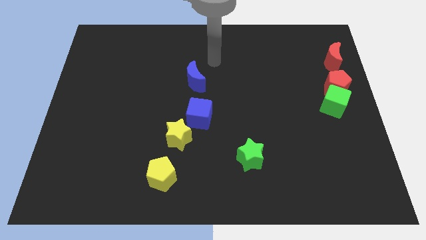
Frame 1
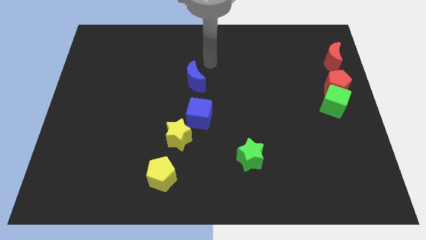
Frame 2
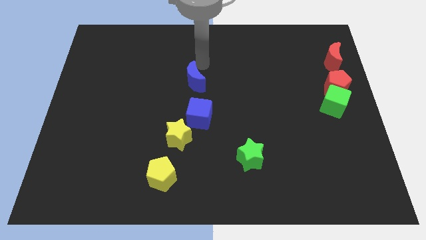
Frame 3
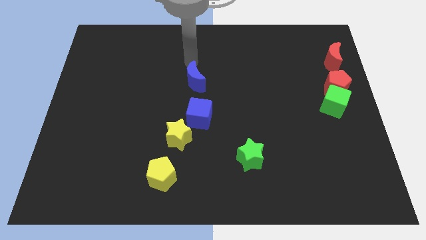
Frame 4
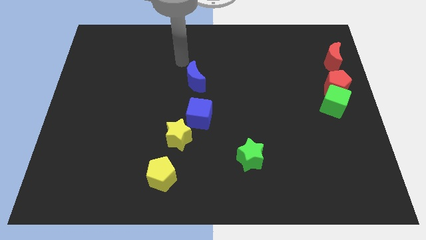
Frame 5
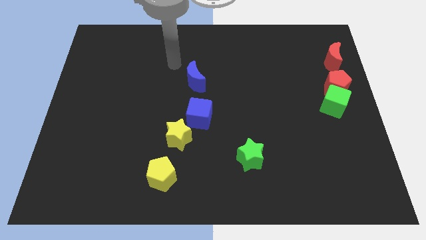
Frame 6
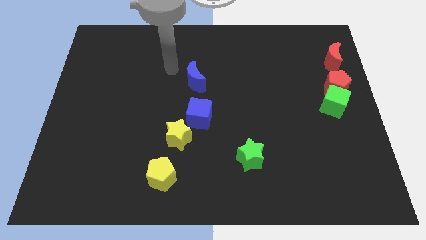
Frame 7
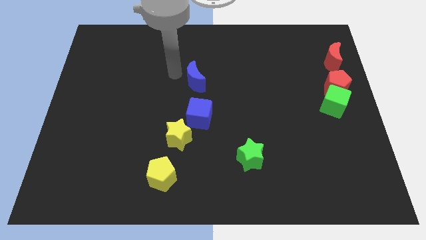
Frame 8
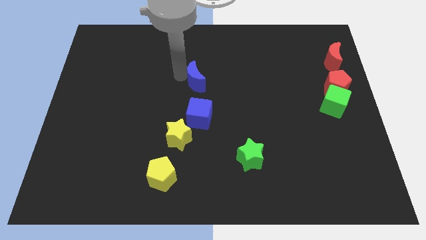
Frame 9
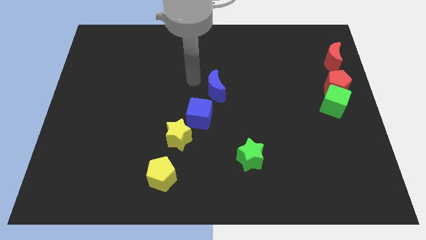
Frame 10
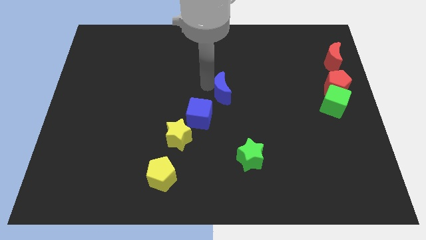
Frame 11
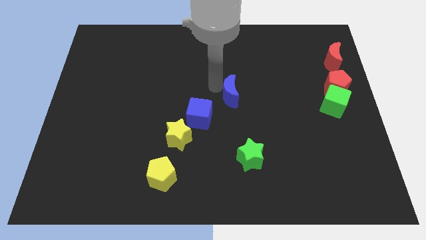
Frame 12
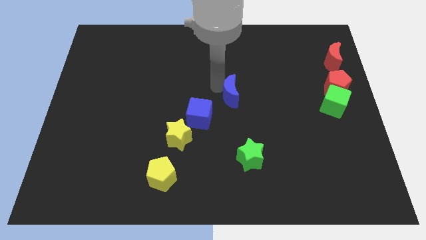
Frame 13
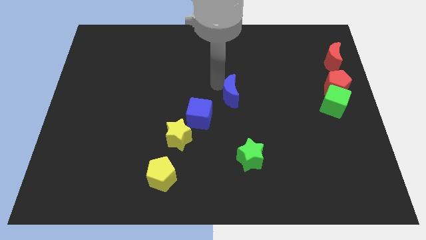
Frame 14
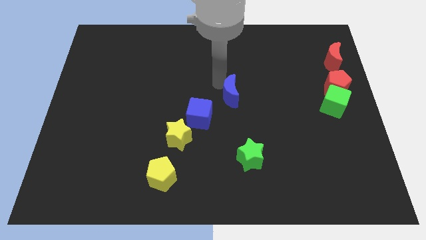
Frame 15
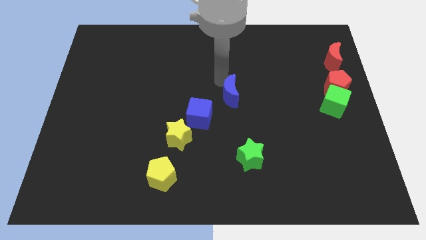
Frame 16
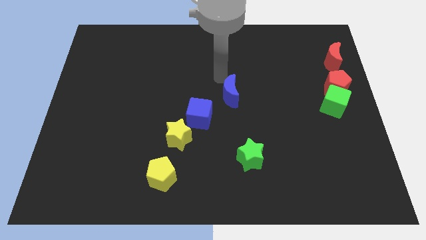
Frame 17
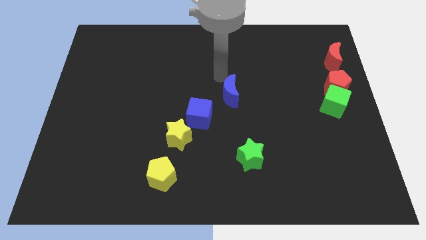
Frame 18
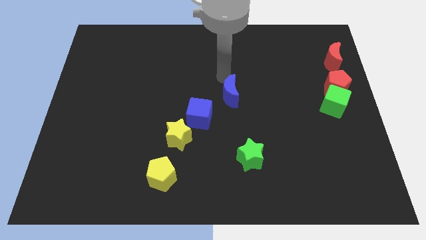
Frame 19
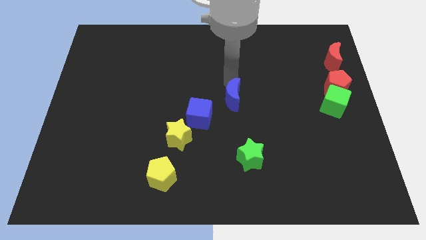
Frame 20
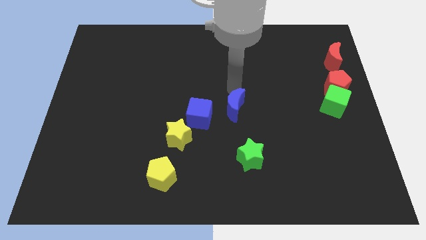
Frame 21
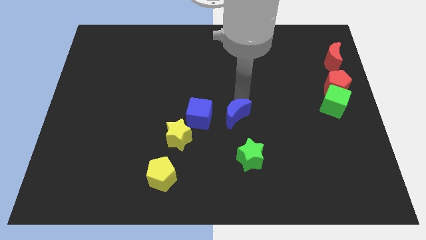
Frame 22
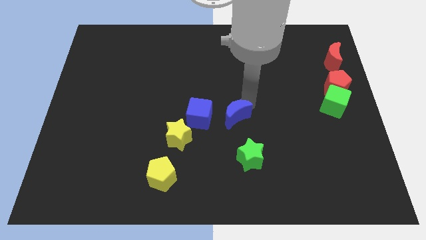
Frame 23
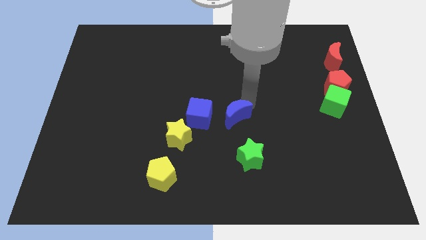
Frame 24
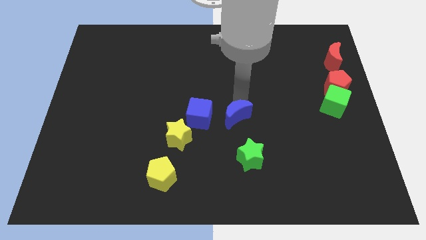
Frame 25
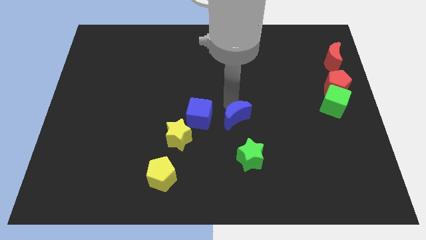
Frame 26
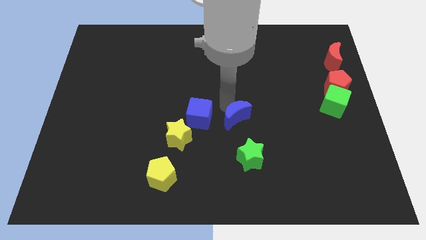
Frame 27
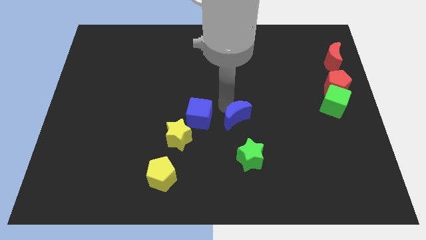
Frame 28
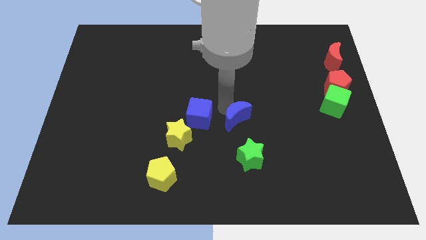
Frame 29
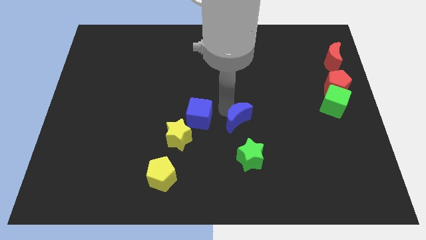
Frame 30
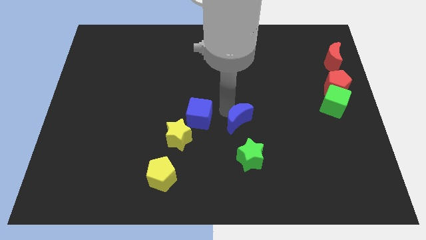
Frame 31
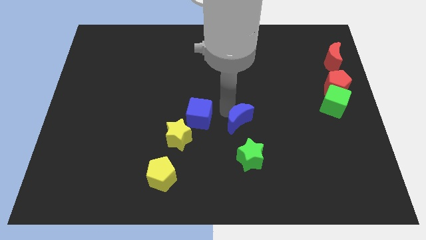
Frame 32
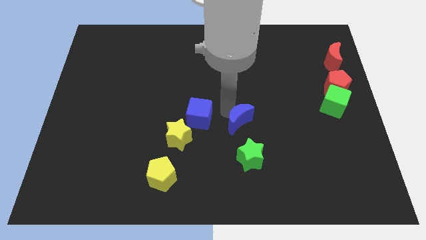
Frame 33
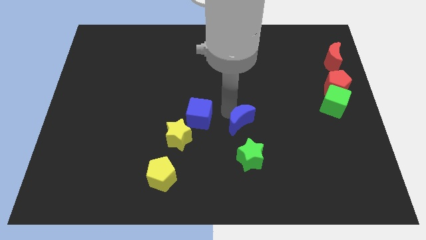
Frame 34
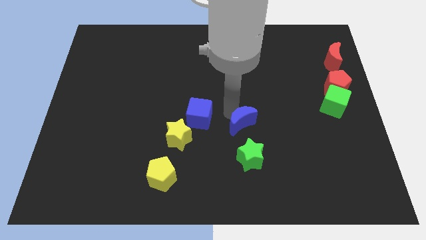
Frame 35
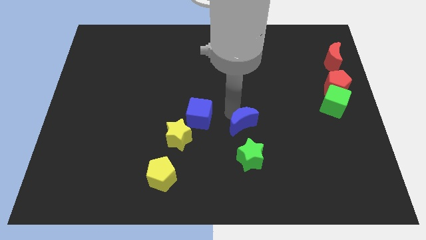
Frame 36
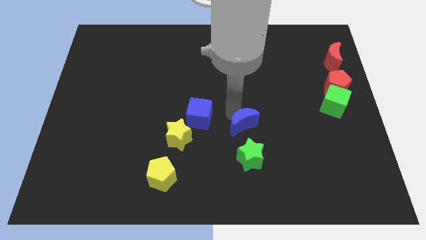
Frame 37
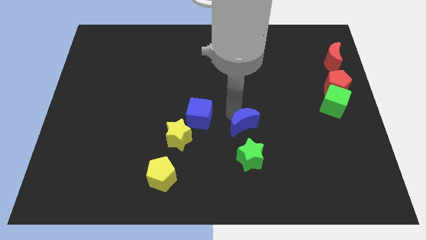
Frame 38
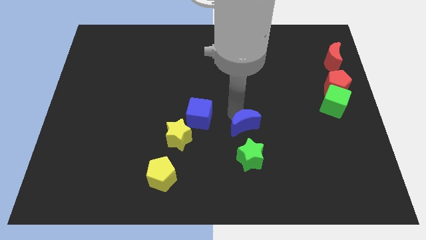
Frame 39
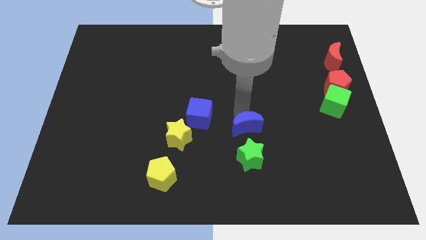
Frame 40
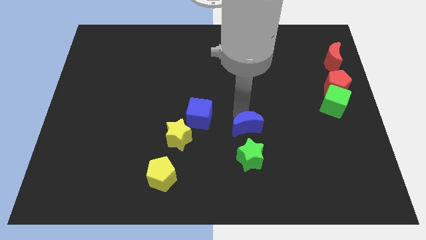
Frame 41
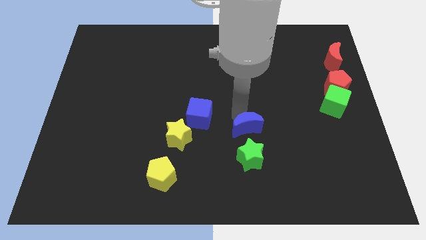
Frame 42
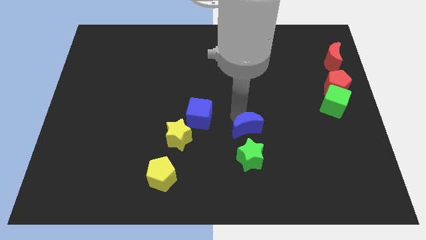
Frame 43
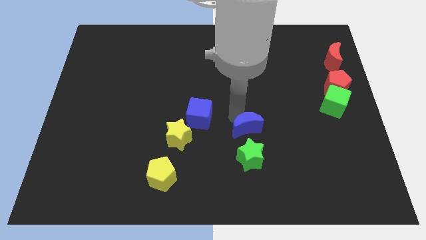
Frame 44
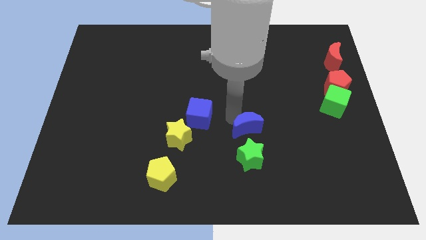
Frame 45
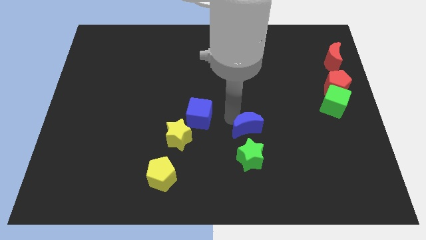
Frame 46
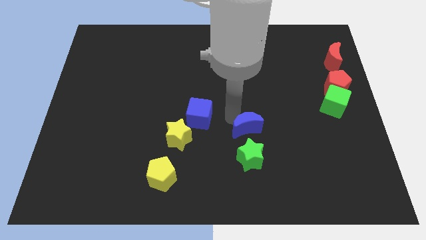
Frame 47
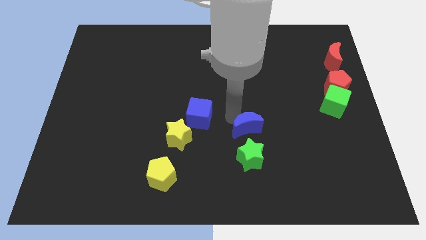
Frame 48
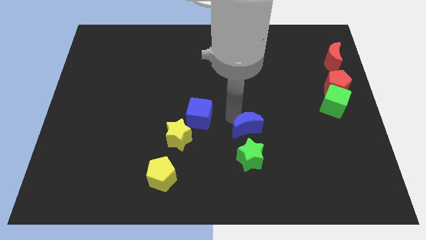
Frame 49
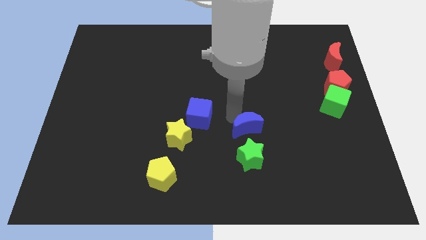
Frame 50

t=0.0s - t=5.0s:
move the blue moon to the top side of the green star

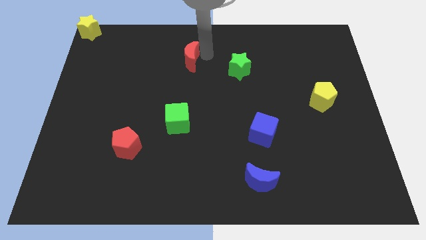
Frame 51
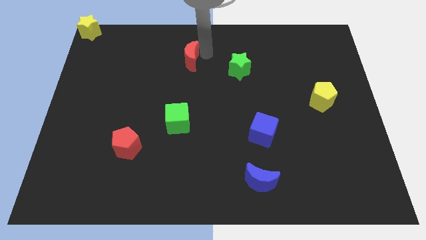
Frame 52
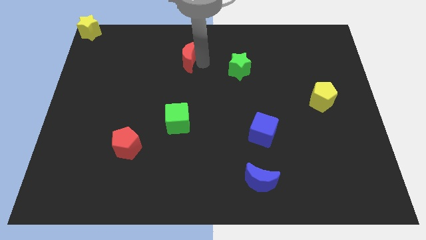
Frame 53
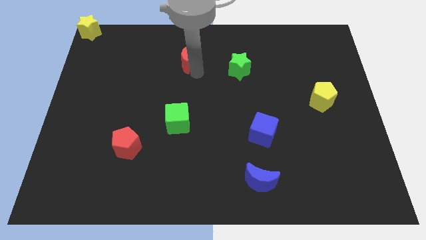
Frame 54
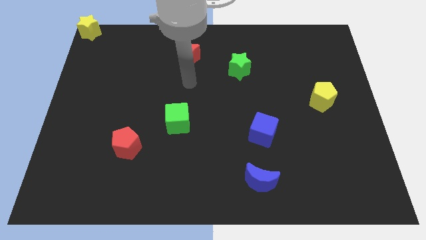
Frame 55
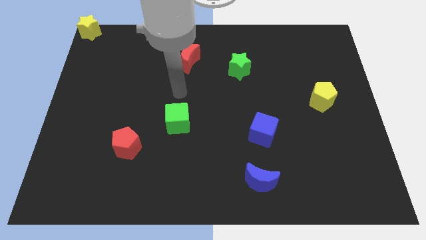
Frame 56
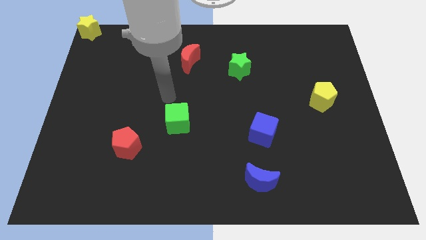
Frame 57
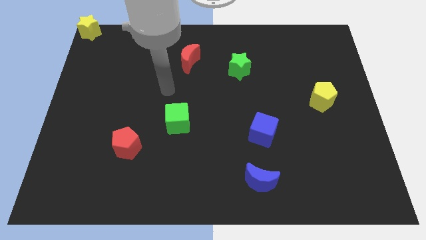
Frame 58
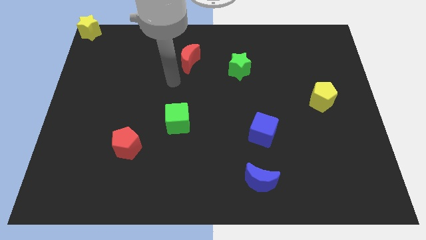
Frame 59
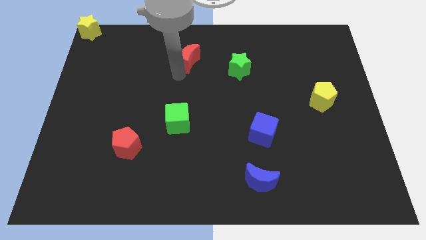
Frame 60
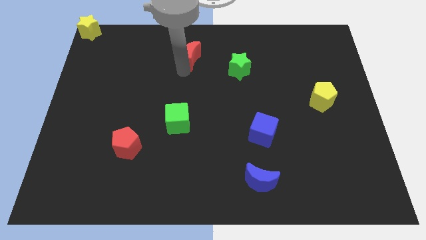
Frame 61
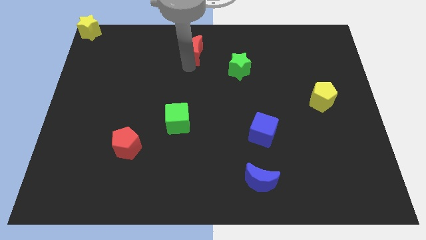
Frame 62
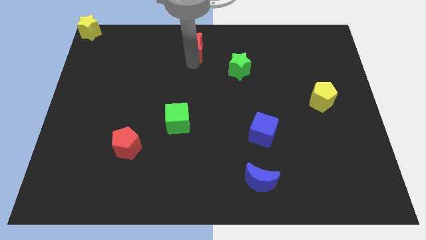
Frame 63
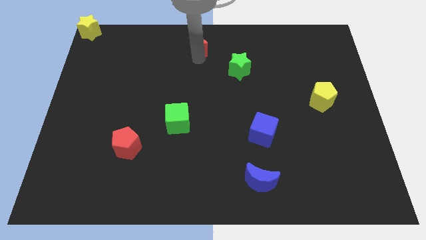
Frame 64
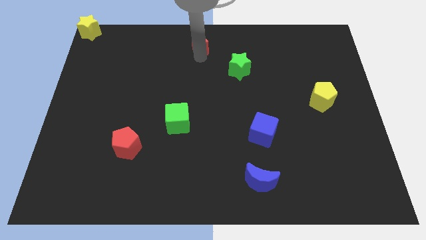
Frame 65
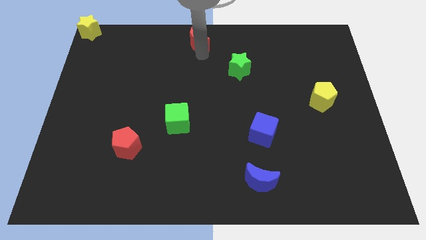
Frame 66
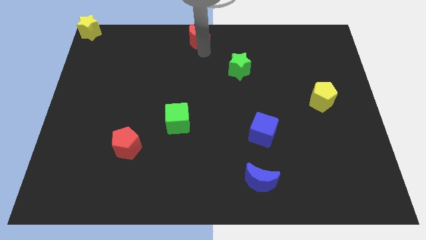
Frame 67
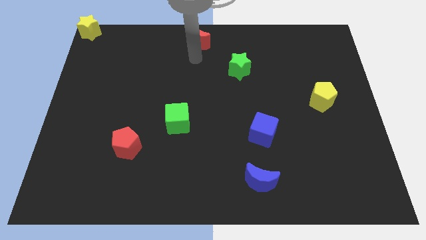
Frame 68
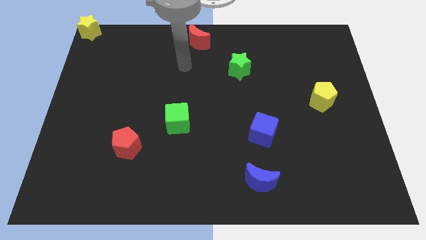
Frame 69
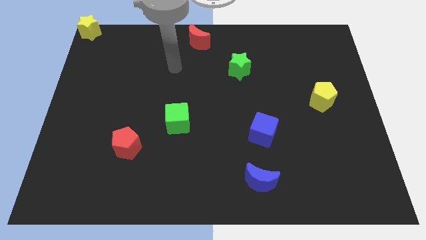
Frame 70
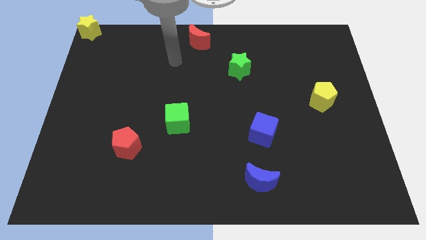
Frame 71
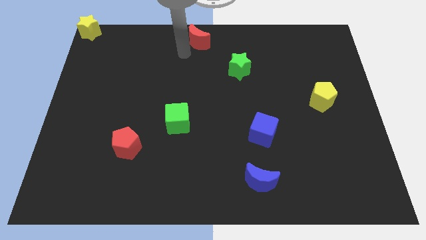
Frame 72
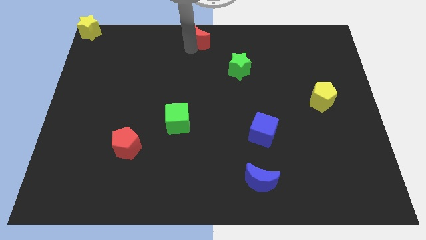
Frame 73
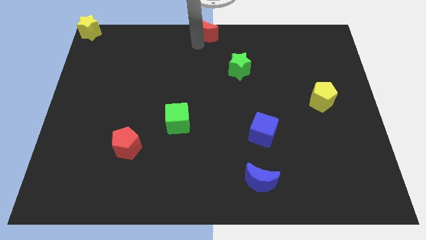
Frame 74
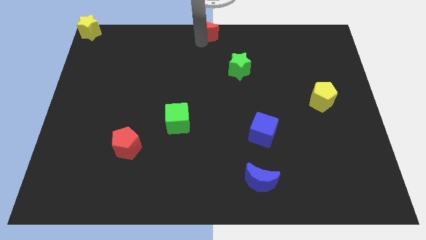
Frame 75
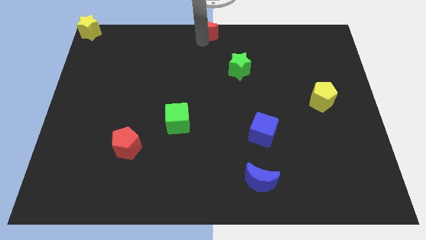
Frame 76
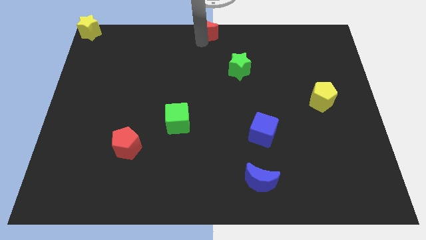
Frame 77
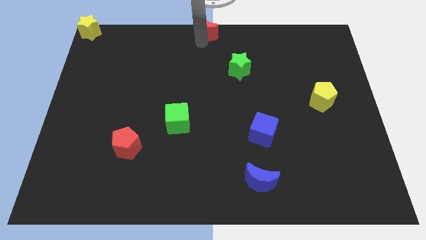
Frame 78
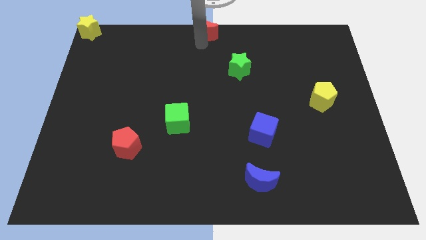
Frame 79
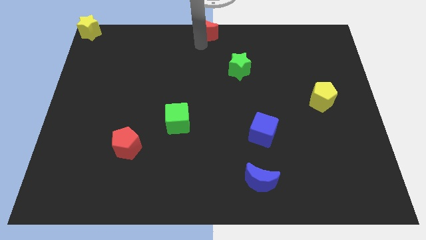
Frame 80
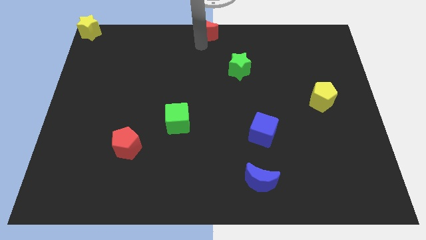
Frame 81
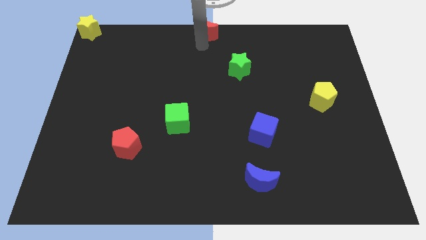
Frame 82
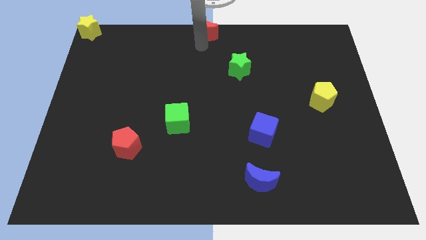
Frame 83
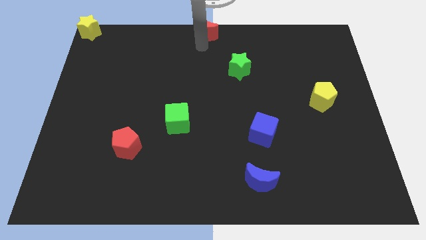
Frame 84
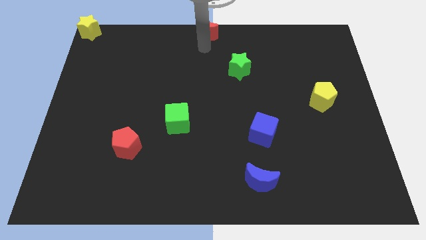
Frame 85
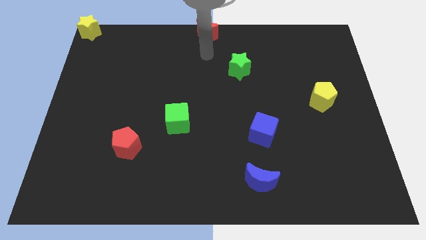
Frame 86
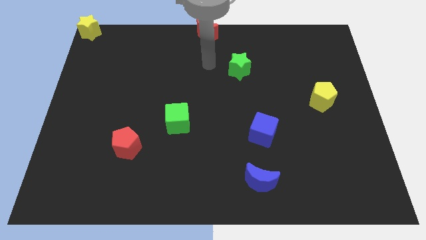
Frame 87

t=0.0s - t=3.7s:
push the red moon at the top center of the table

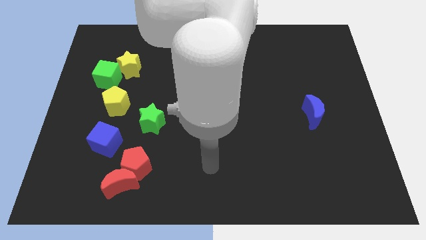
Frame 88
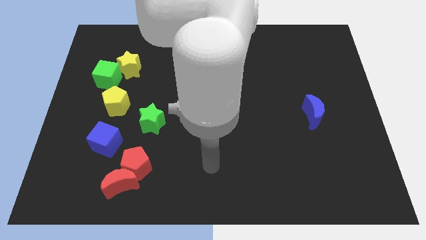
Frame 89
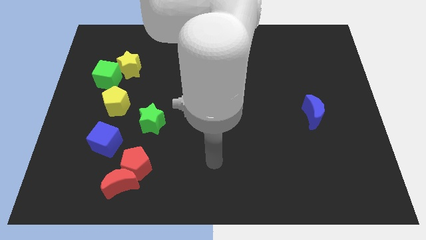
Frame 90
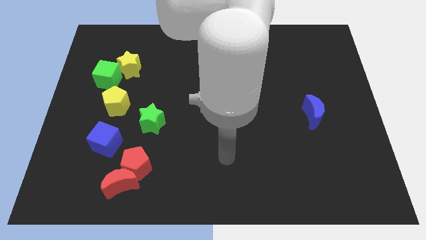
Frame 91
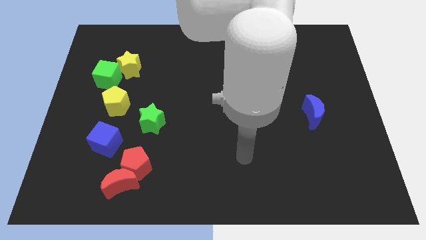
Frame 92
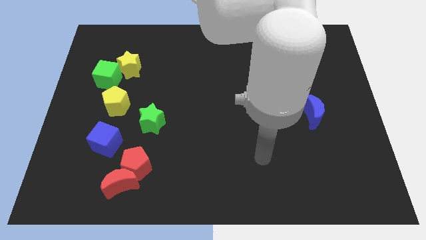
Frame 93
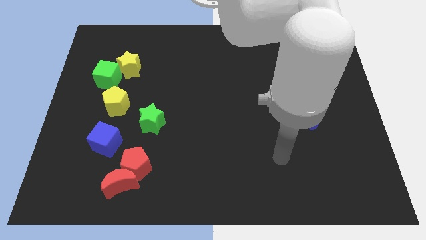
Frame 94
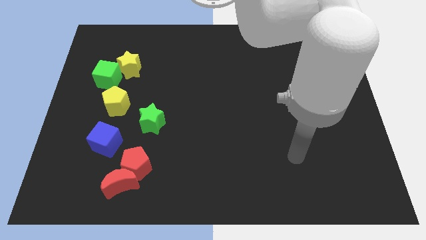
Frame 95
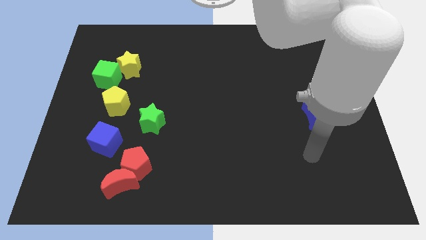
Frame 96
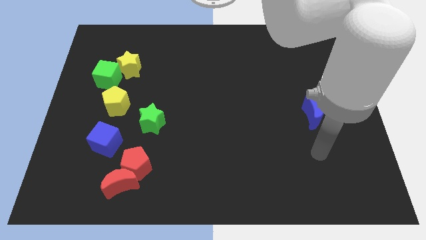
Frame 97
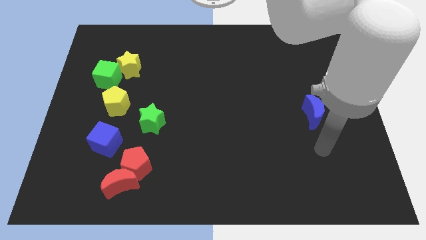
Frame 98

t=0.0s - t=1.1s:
put your hand below the blue crescent
